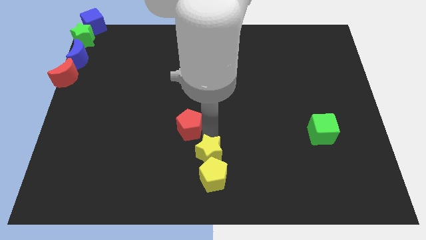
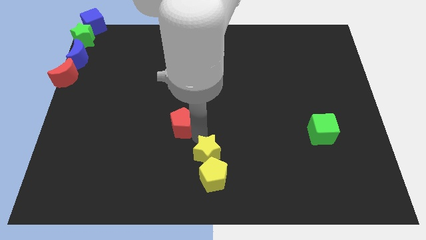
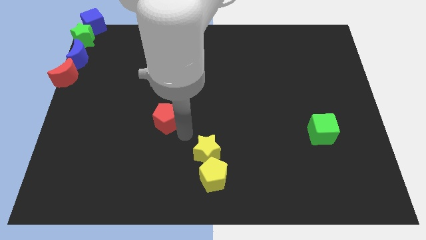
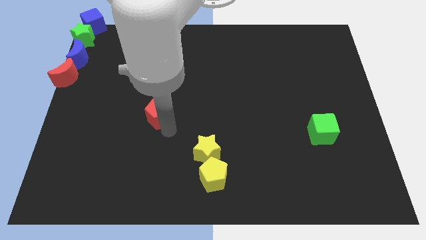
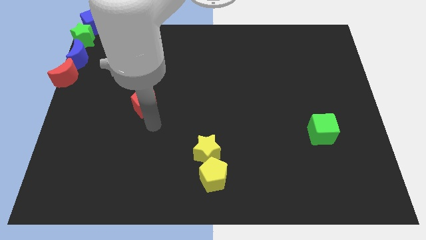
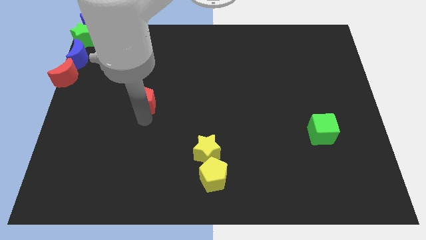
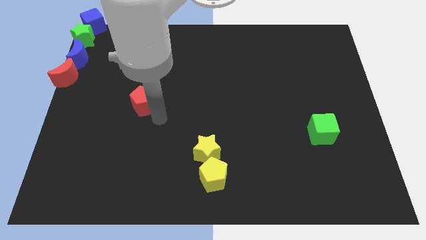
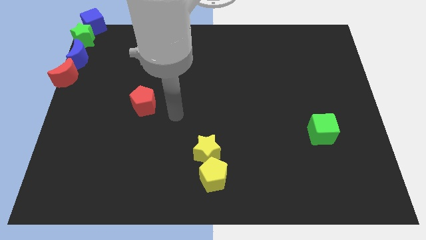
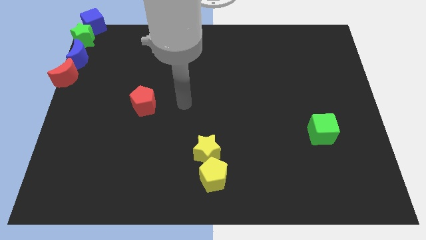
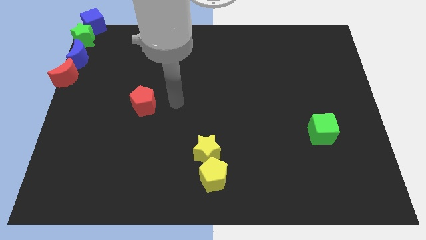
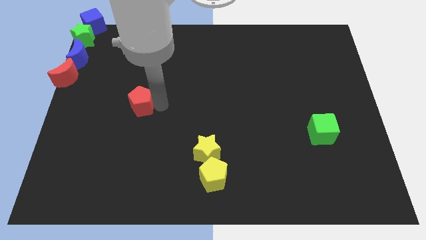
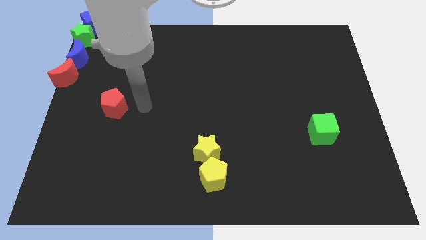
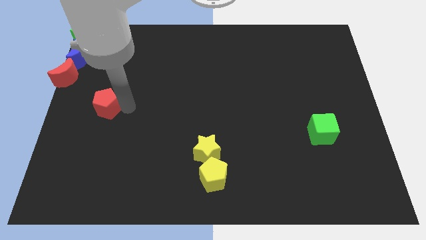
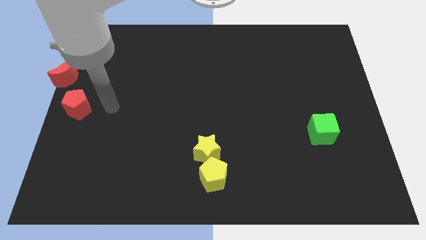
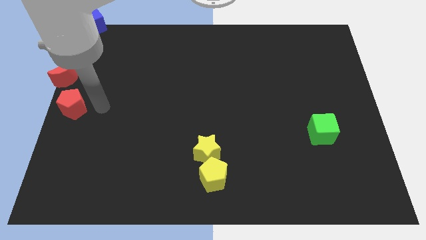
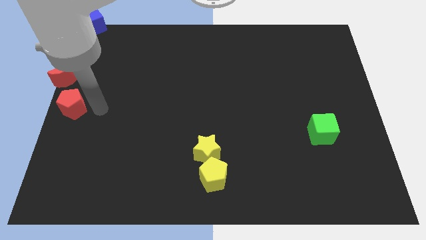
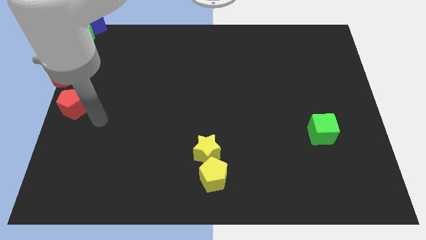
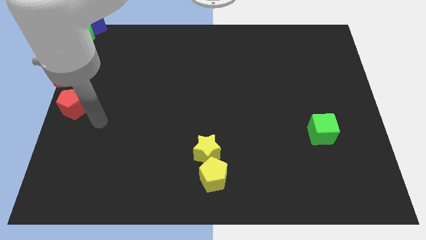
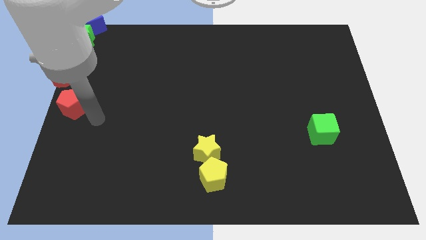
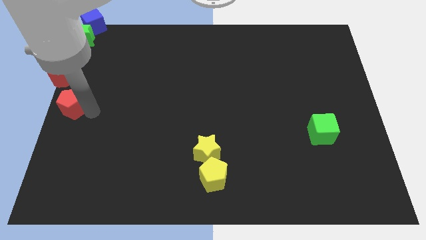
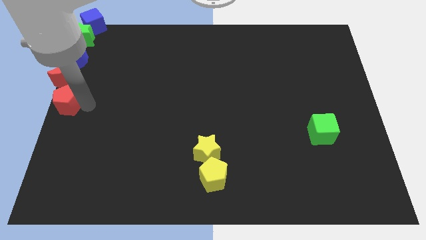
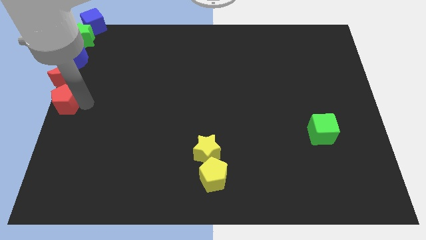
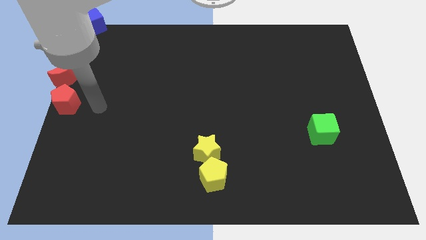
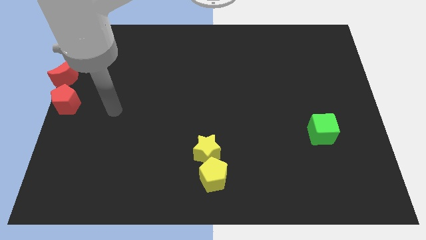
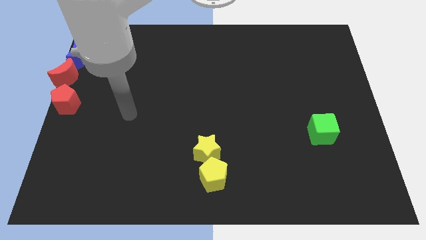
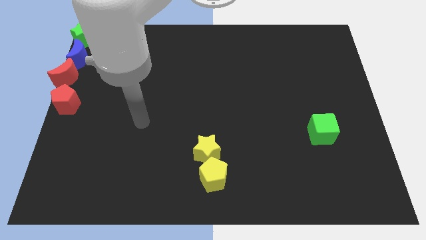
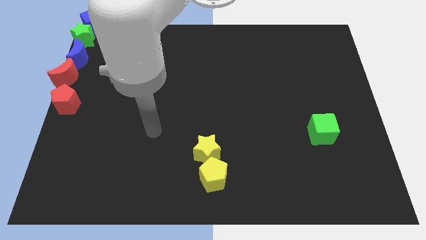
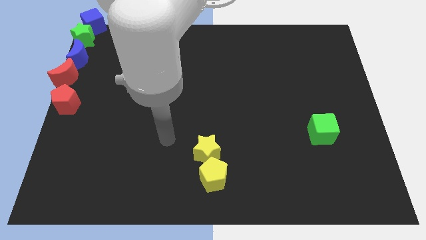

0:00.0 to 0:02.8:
place the red pentagon under the red crescent

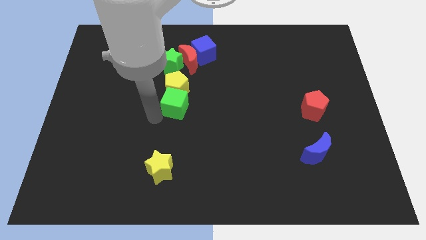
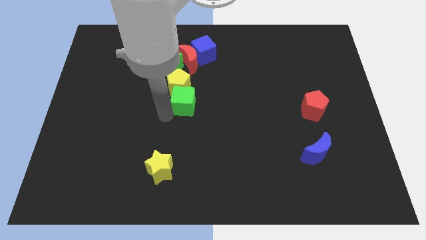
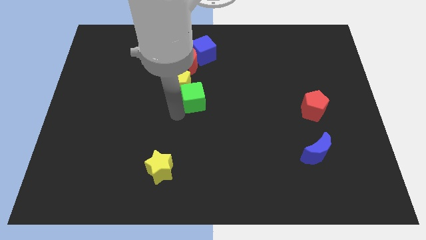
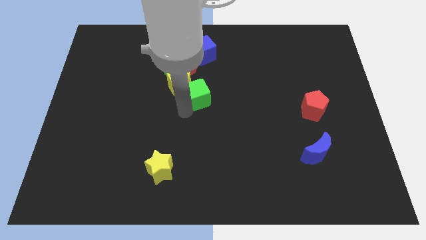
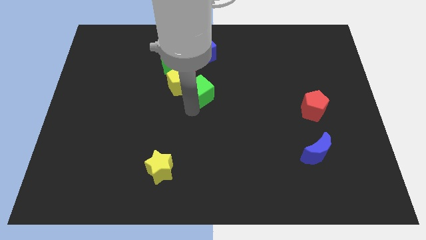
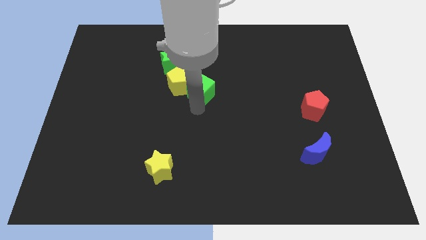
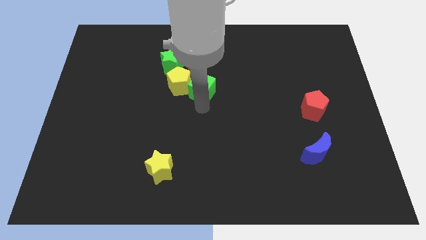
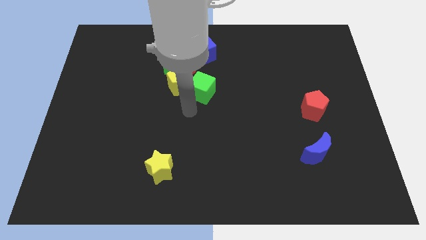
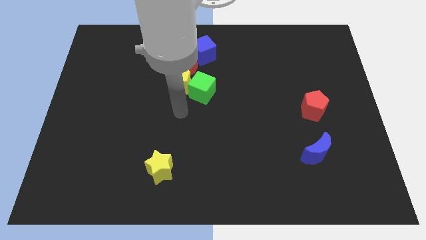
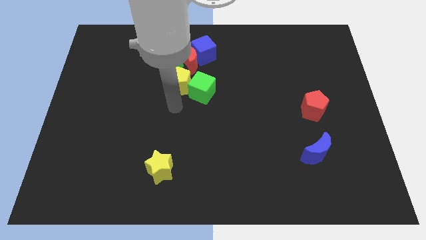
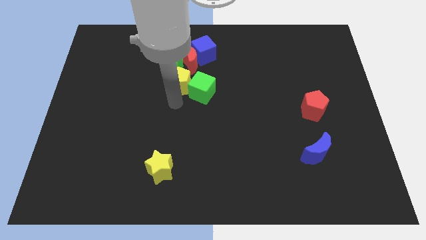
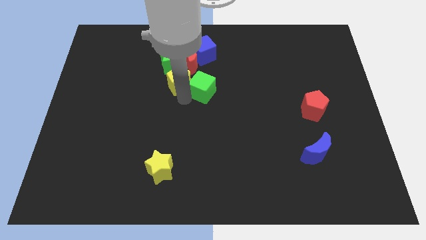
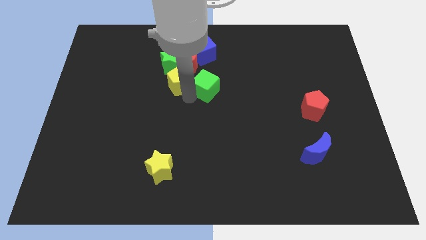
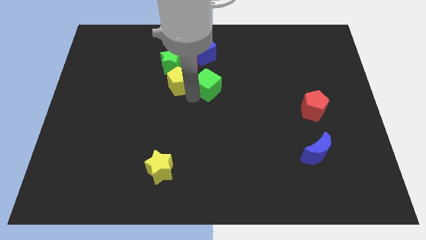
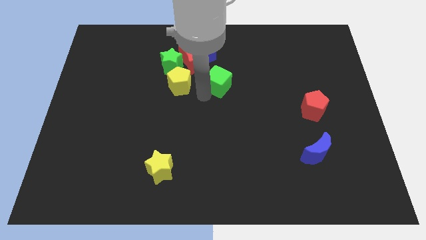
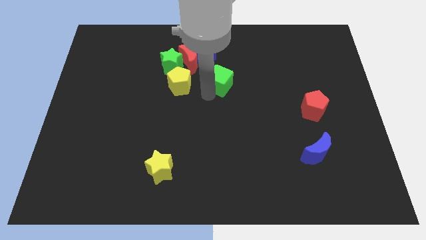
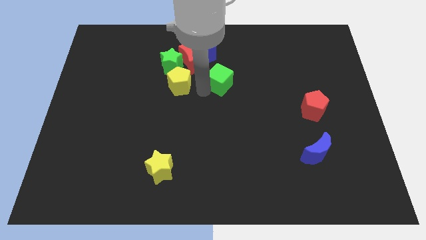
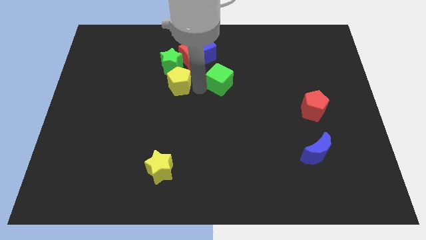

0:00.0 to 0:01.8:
separate the green cube from the yellow pentagon

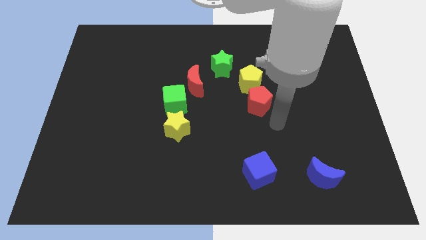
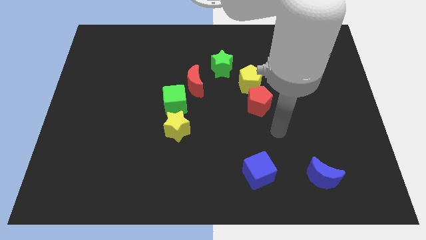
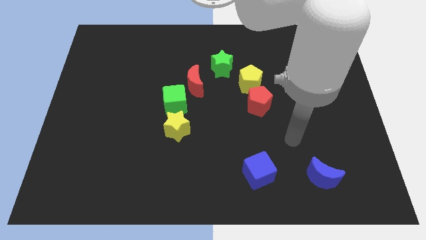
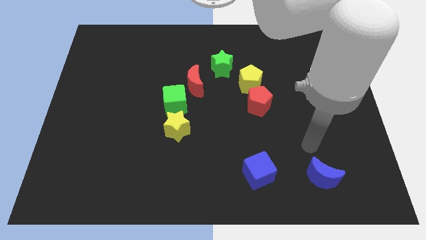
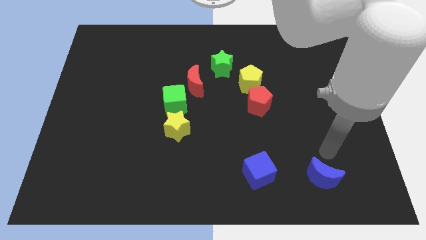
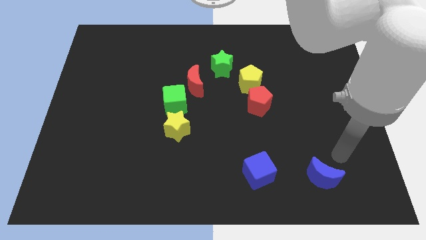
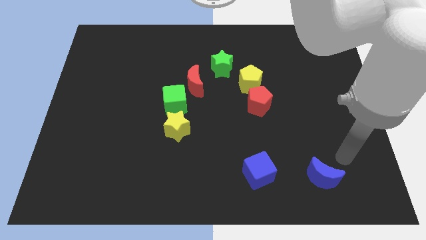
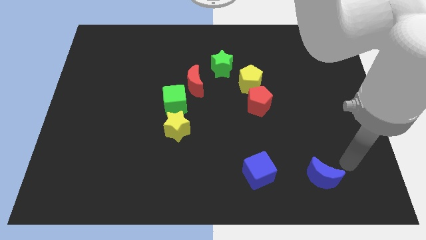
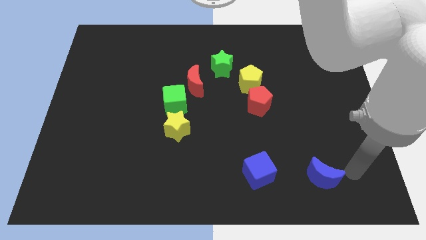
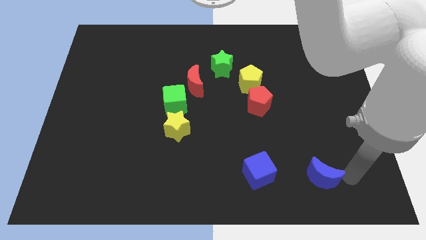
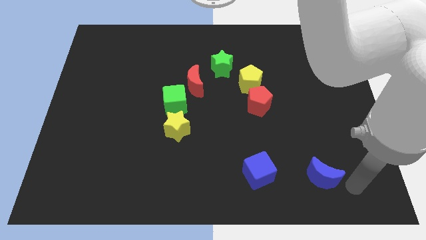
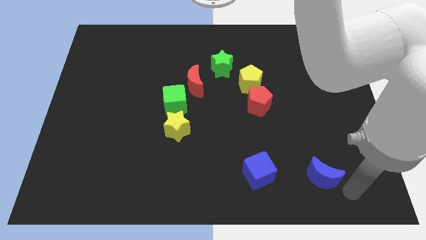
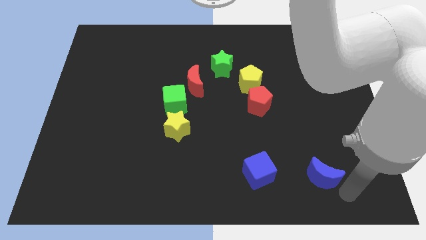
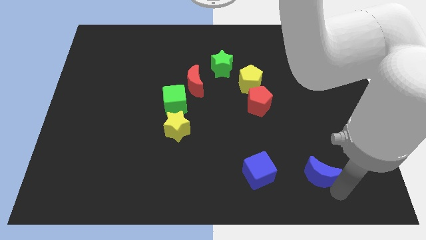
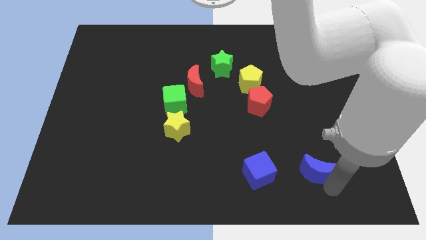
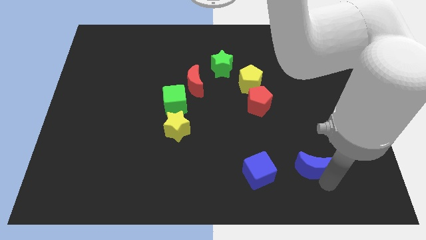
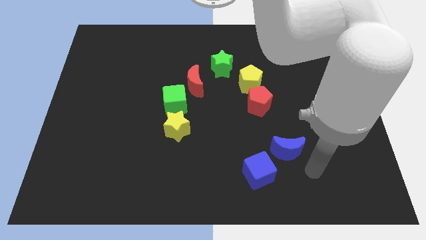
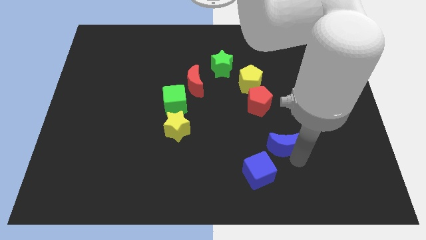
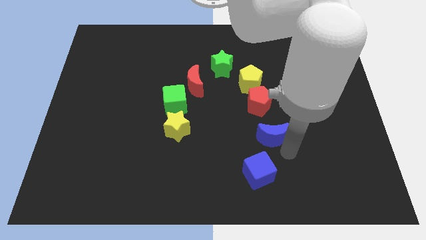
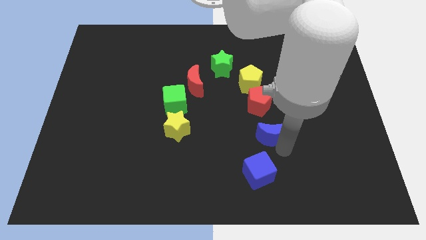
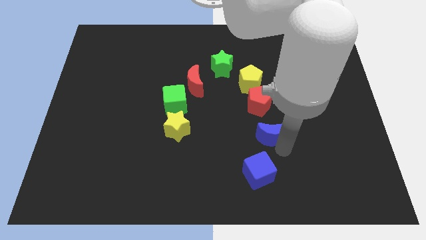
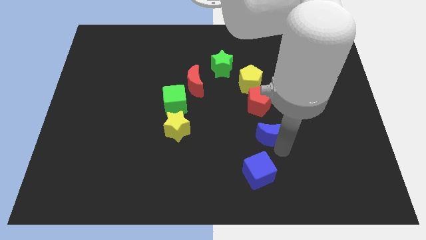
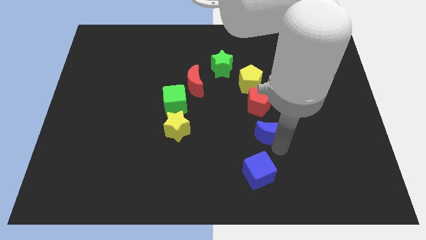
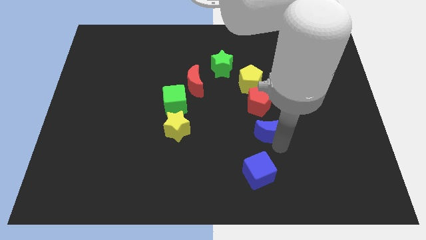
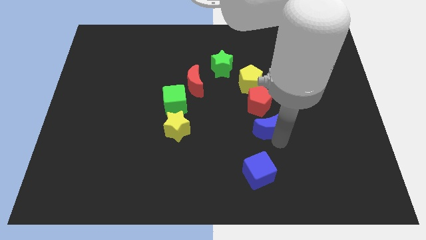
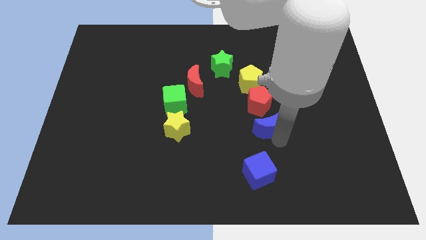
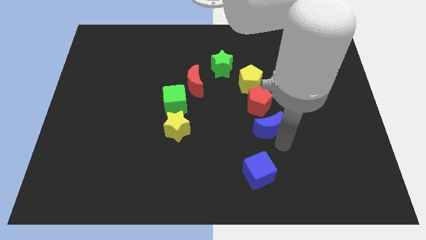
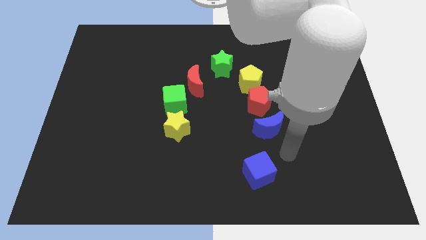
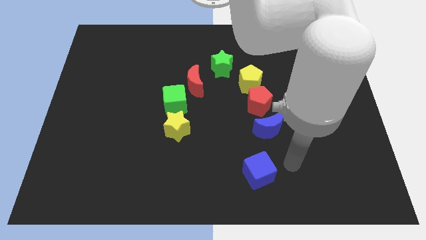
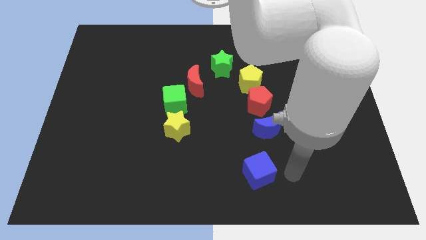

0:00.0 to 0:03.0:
move the blue crescent below the red pentagon

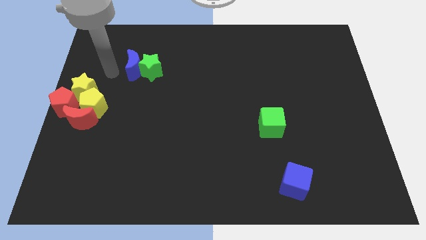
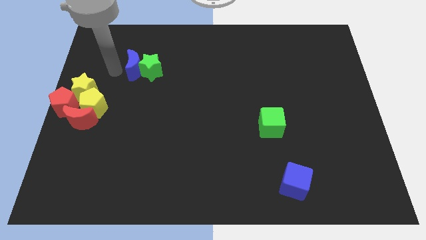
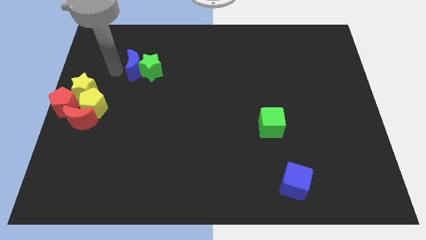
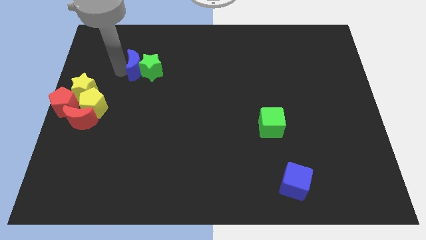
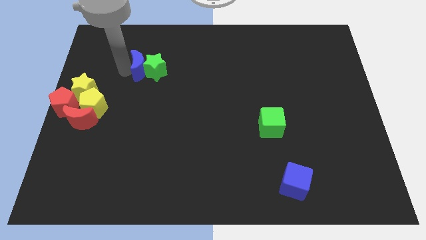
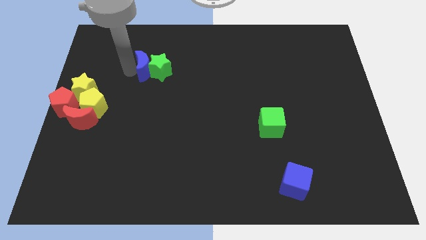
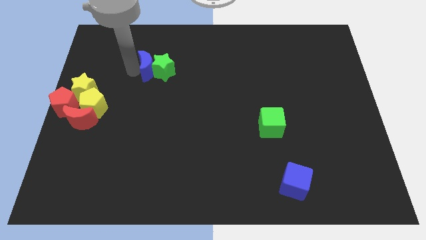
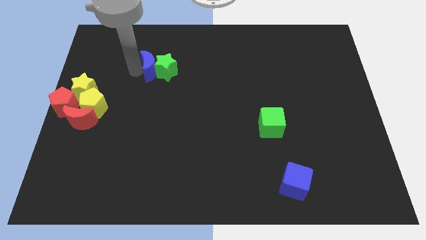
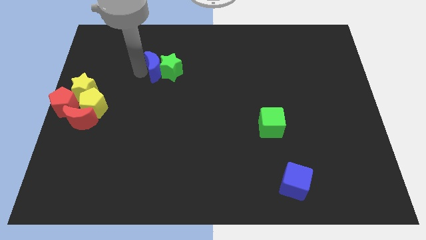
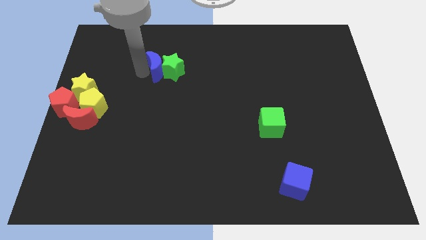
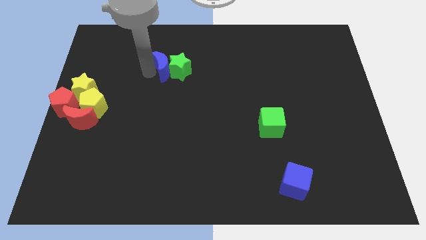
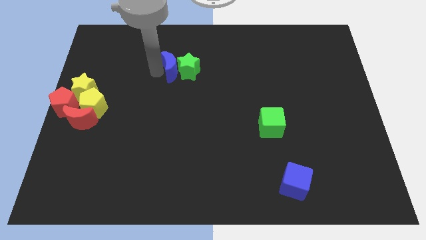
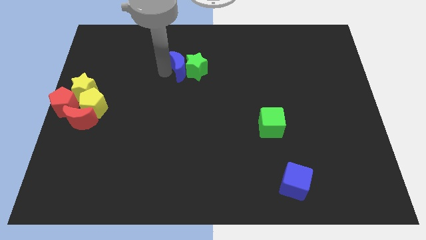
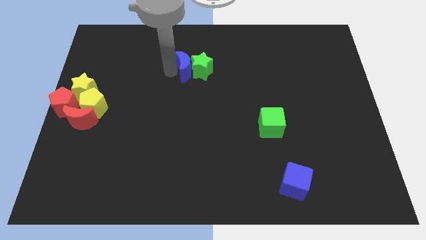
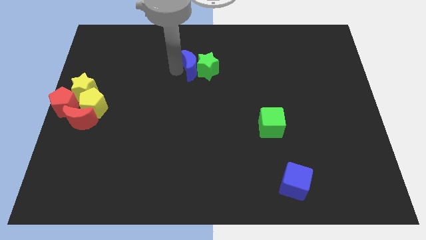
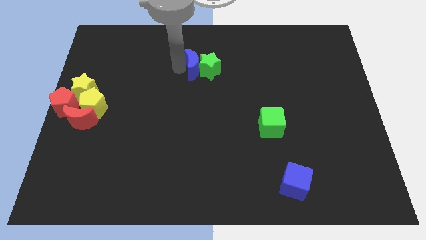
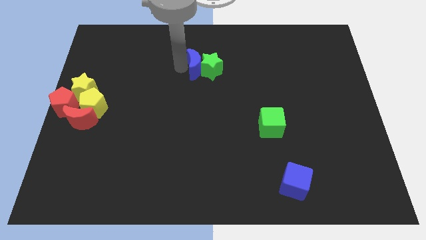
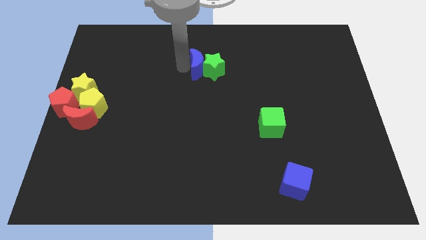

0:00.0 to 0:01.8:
move the blue crescent along with the green star to the right
